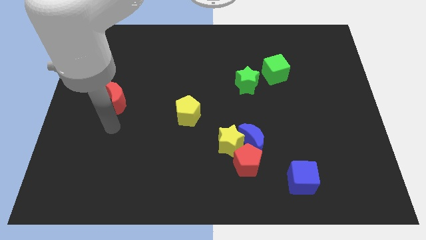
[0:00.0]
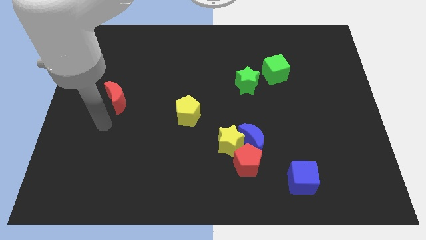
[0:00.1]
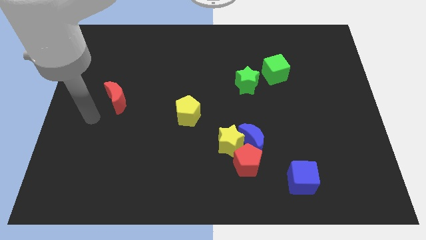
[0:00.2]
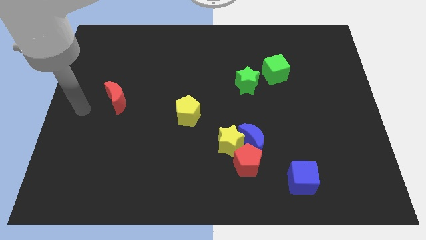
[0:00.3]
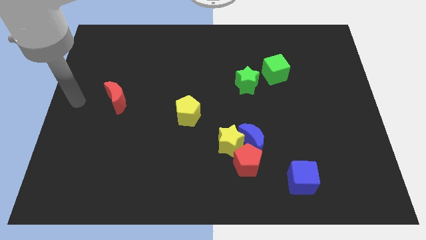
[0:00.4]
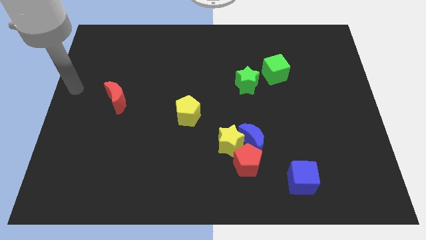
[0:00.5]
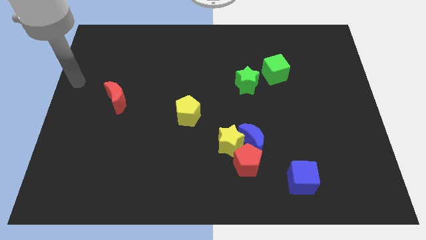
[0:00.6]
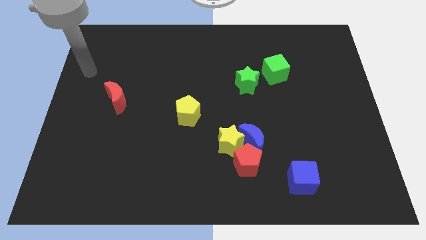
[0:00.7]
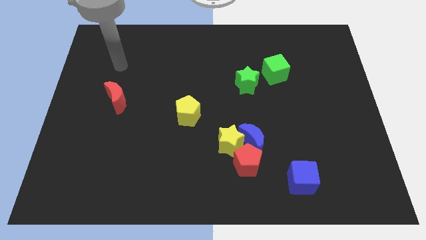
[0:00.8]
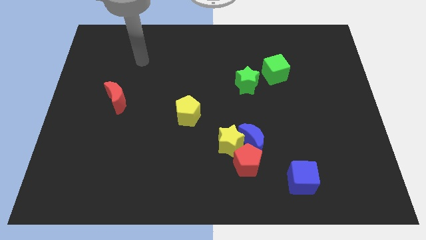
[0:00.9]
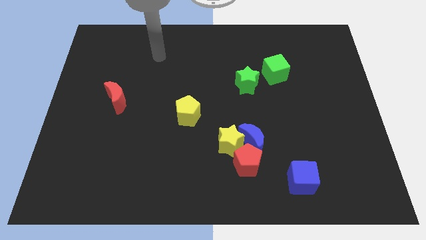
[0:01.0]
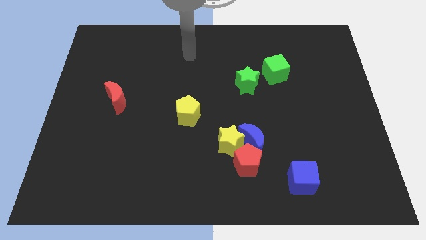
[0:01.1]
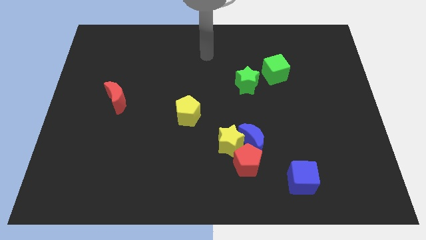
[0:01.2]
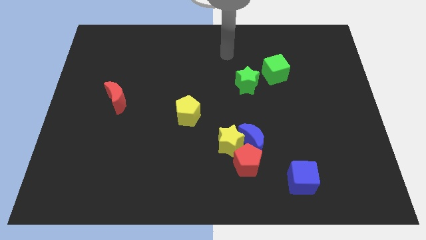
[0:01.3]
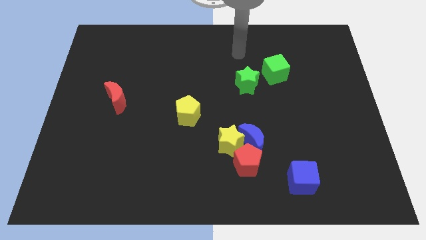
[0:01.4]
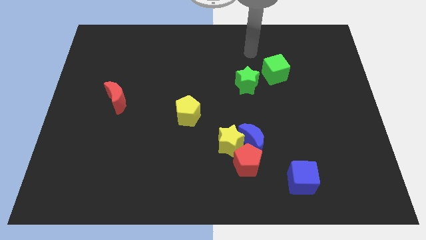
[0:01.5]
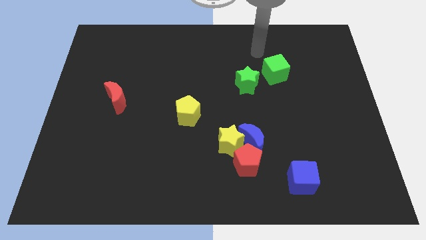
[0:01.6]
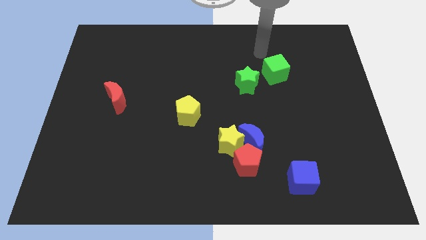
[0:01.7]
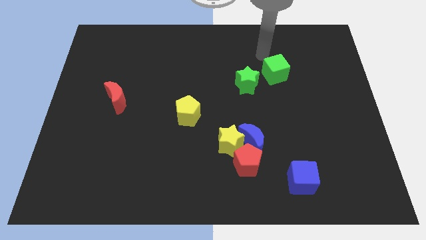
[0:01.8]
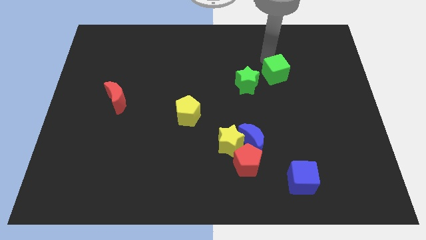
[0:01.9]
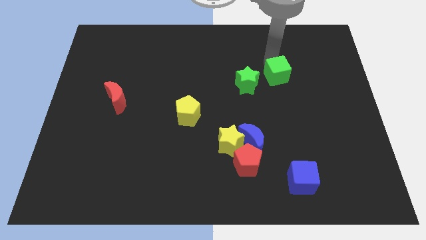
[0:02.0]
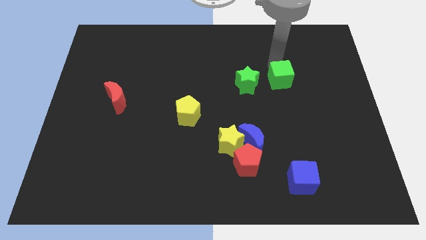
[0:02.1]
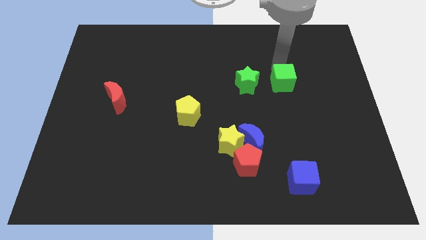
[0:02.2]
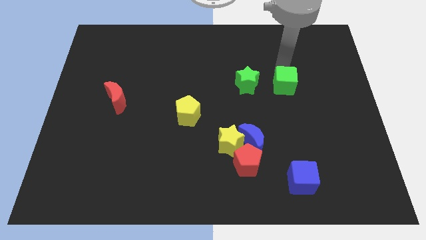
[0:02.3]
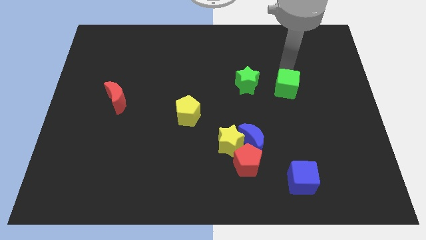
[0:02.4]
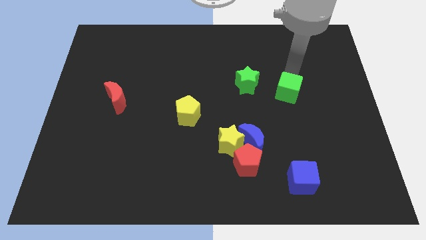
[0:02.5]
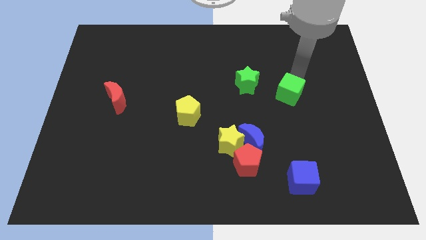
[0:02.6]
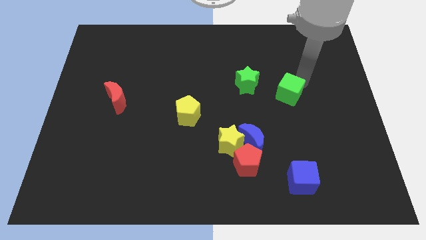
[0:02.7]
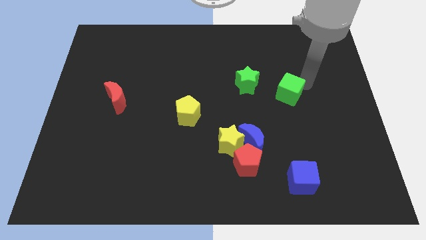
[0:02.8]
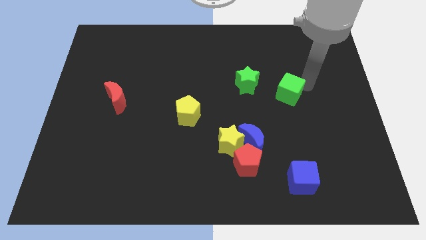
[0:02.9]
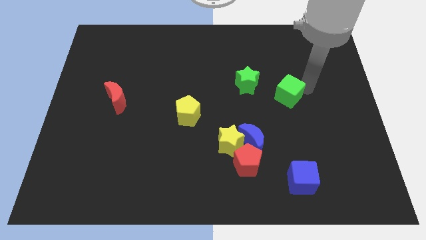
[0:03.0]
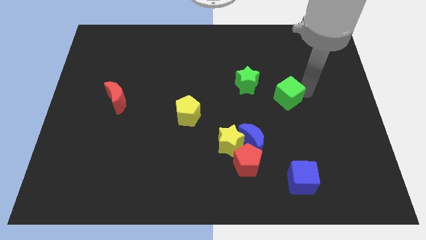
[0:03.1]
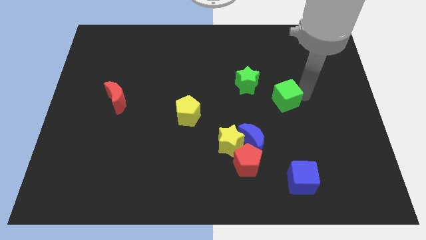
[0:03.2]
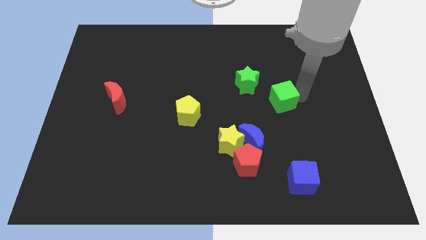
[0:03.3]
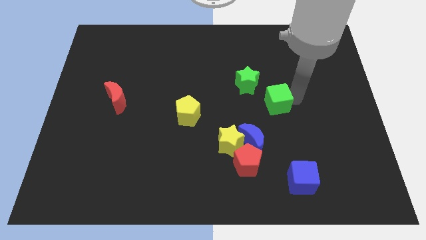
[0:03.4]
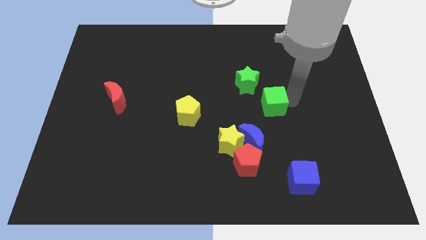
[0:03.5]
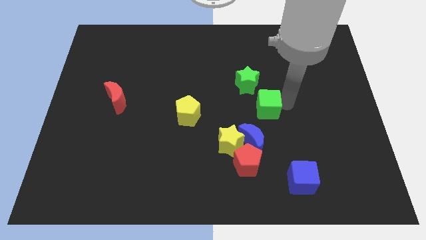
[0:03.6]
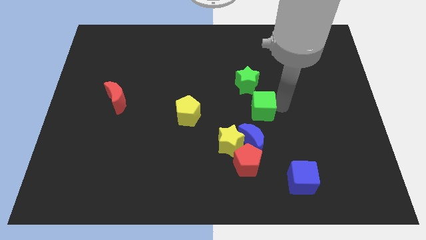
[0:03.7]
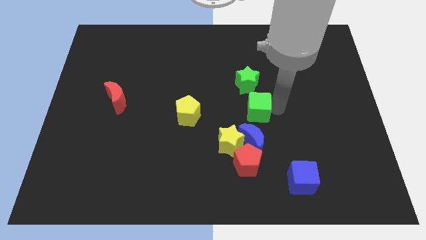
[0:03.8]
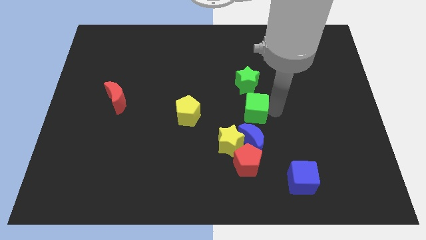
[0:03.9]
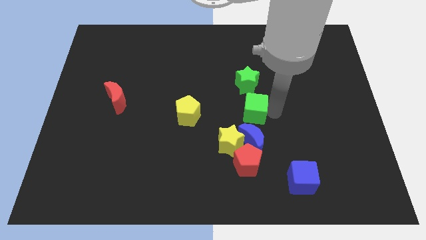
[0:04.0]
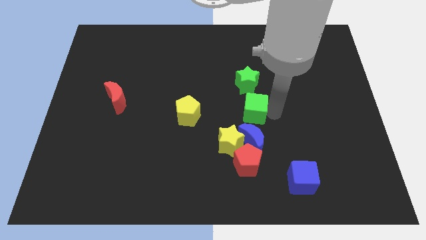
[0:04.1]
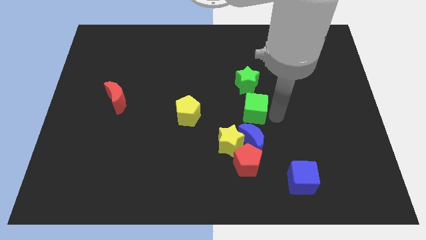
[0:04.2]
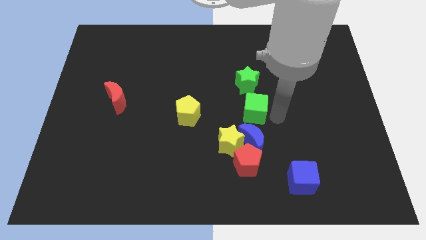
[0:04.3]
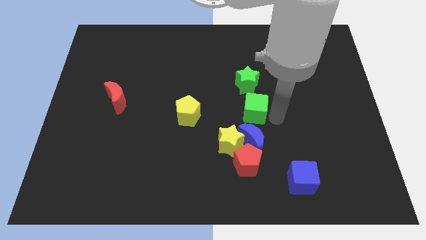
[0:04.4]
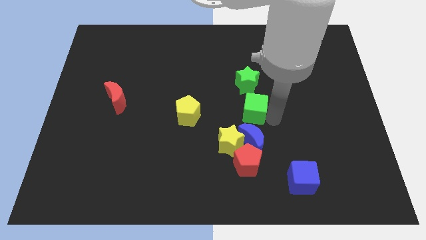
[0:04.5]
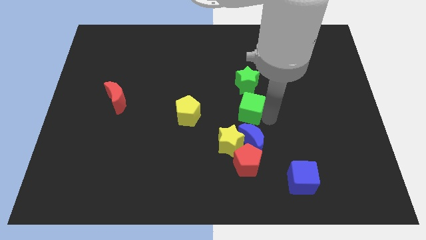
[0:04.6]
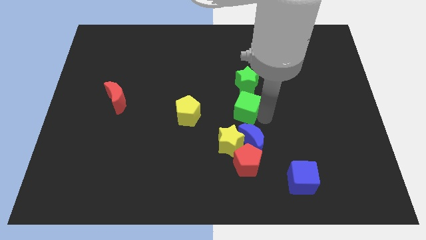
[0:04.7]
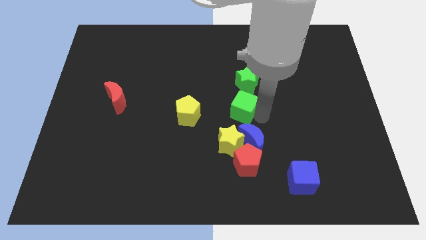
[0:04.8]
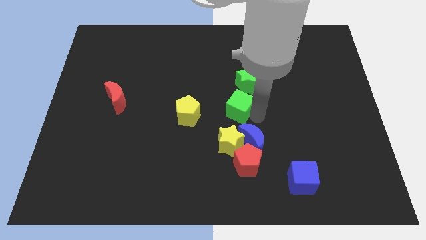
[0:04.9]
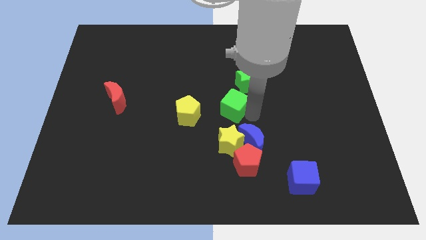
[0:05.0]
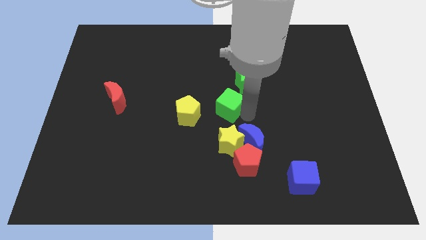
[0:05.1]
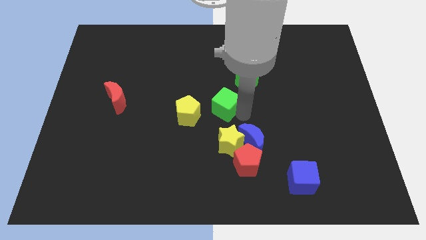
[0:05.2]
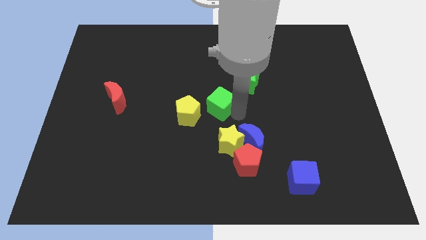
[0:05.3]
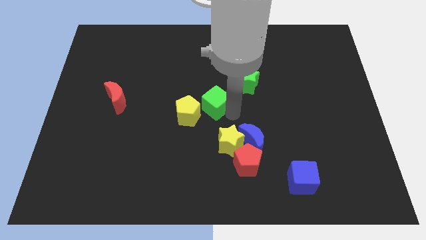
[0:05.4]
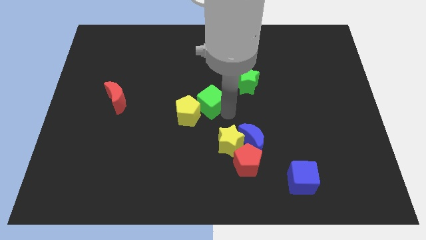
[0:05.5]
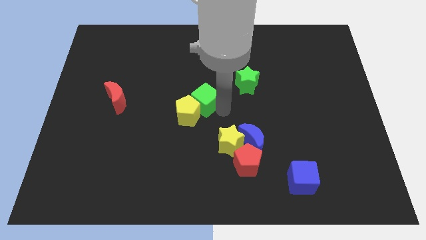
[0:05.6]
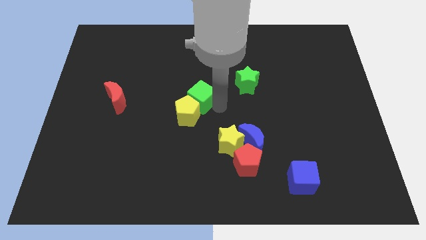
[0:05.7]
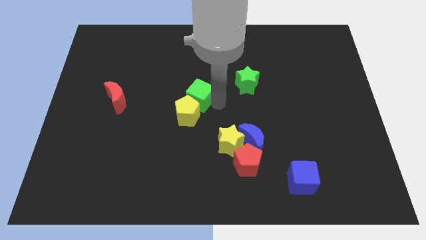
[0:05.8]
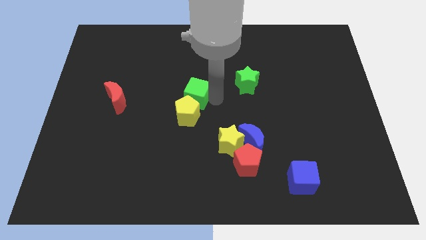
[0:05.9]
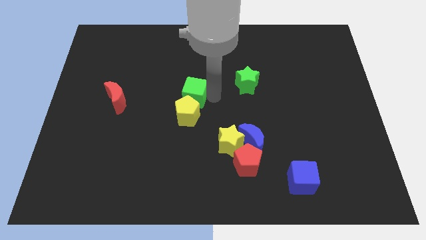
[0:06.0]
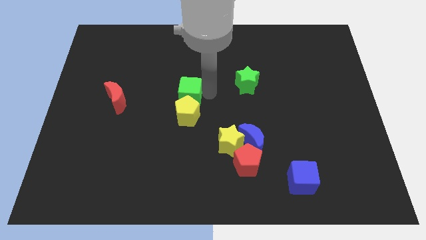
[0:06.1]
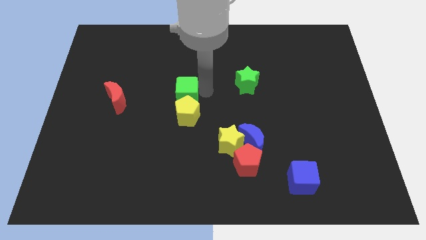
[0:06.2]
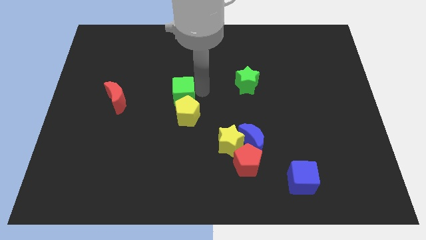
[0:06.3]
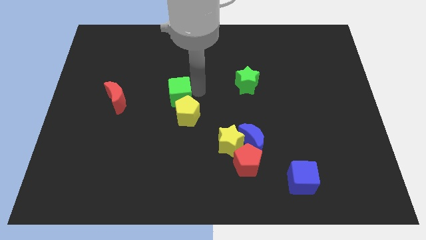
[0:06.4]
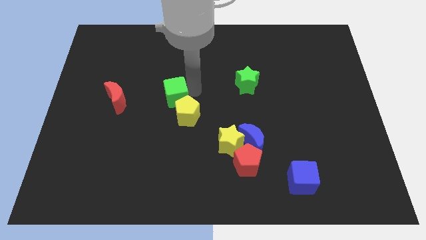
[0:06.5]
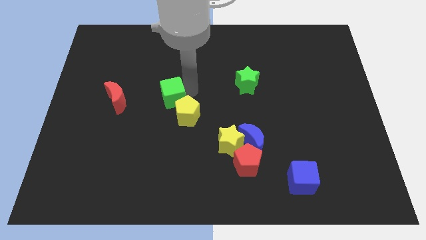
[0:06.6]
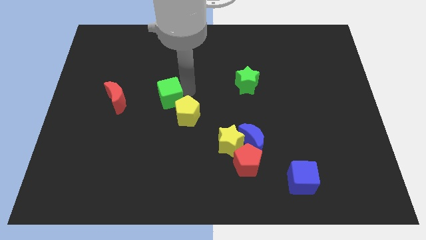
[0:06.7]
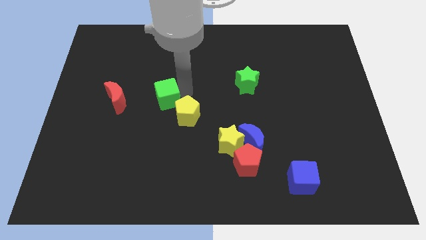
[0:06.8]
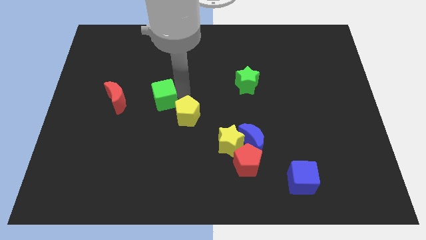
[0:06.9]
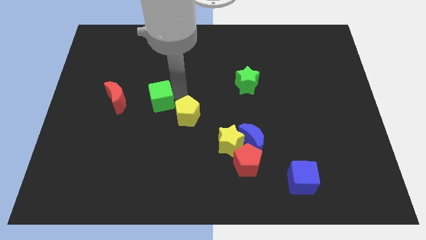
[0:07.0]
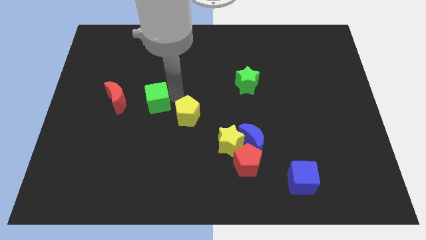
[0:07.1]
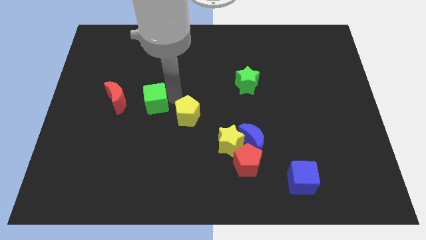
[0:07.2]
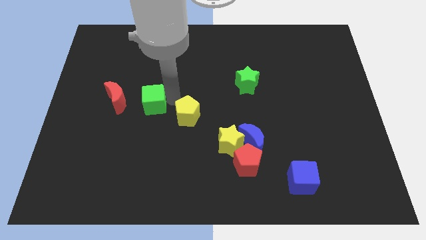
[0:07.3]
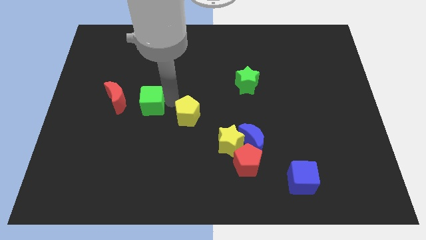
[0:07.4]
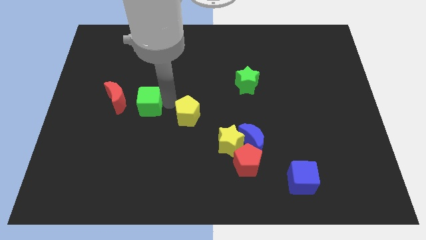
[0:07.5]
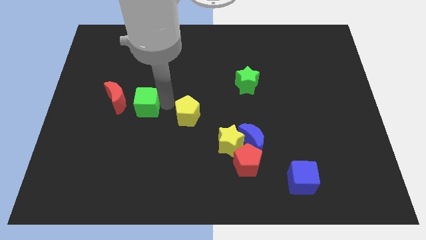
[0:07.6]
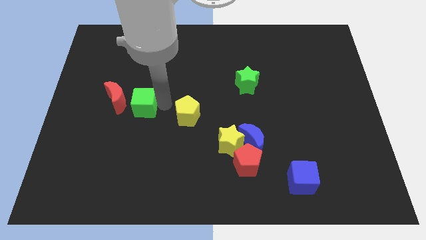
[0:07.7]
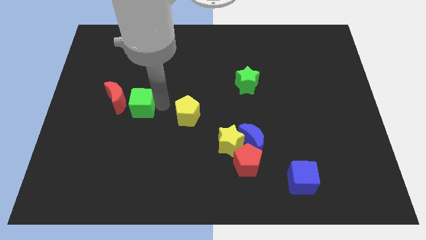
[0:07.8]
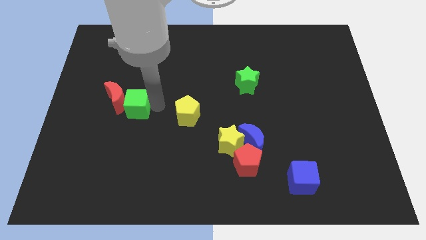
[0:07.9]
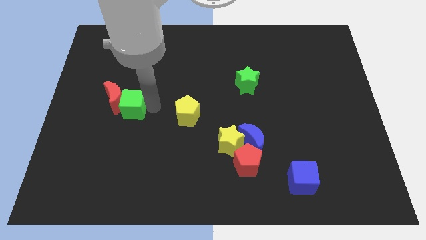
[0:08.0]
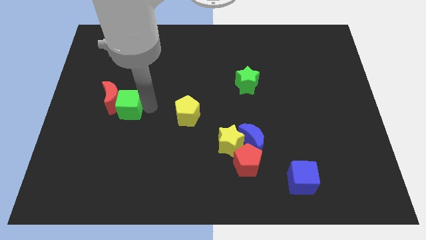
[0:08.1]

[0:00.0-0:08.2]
push the green cube towards the red moon

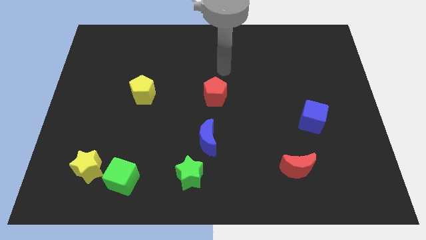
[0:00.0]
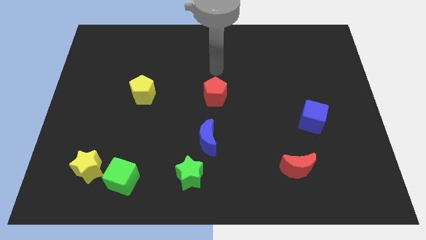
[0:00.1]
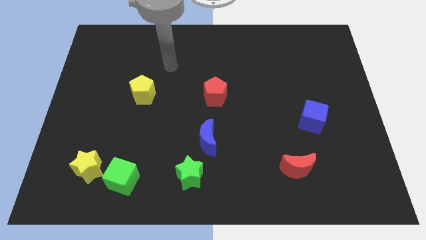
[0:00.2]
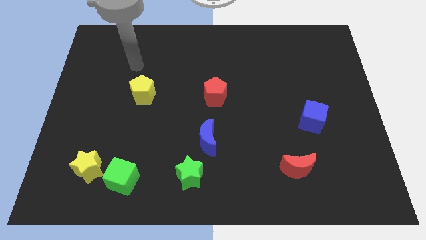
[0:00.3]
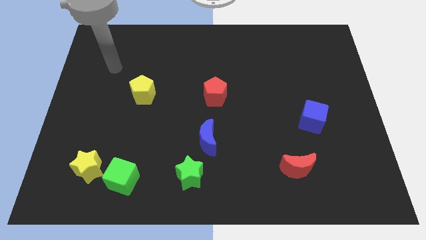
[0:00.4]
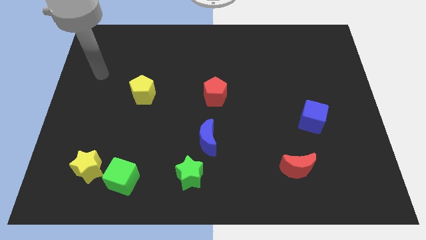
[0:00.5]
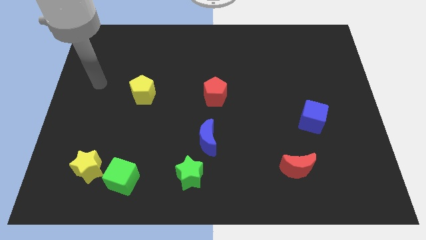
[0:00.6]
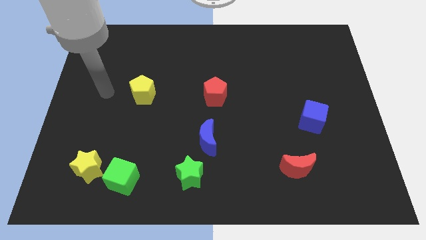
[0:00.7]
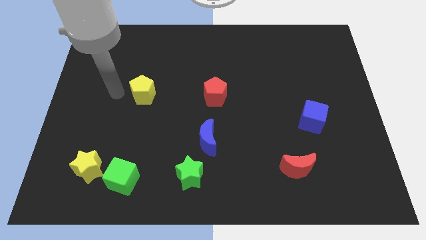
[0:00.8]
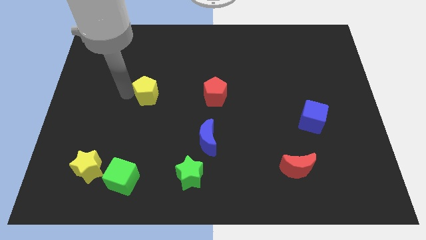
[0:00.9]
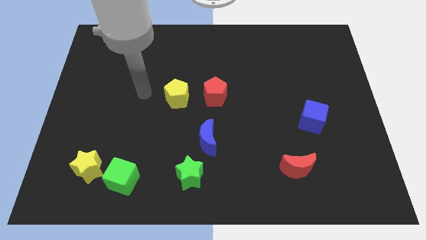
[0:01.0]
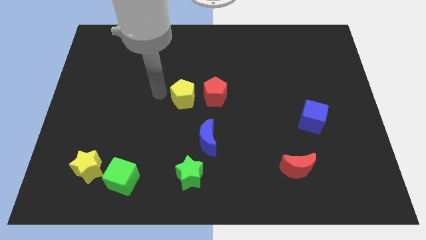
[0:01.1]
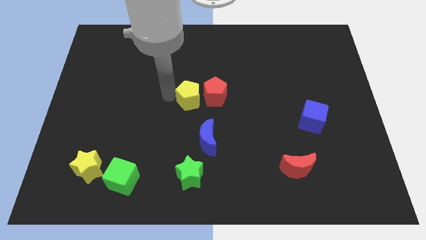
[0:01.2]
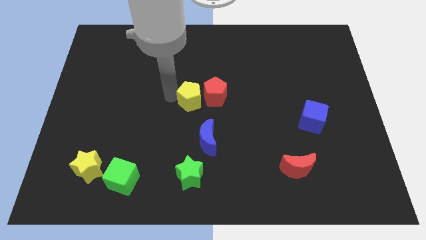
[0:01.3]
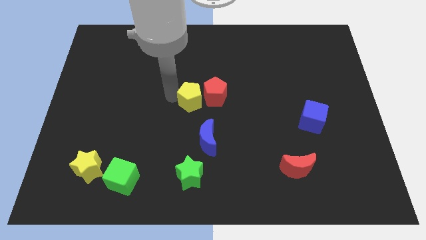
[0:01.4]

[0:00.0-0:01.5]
push the yellow pentagon towards the red pentagon
